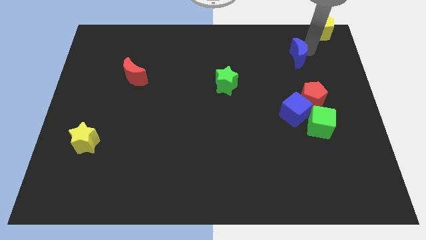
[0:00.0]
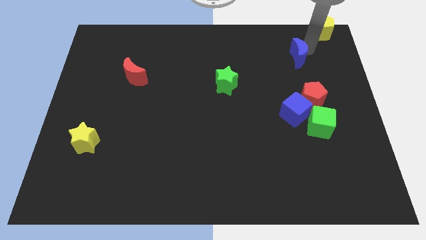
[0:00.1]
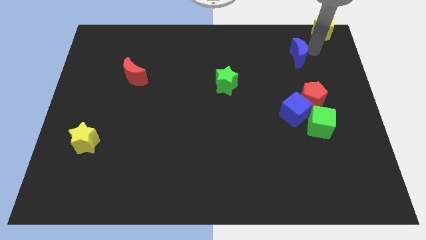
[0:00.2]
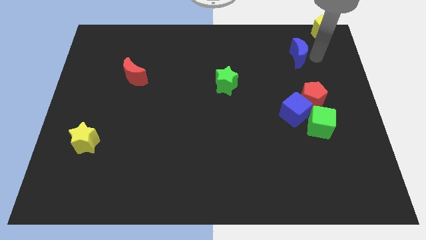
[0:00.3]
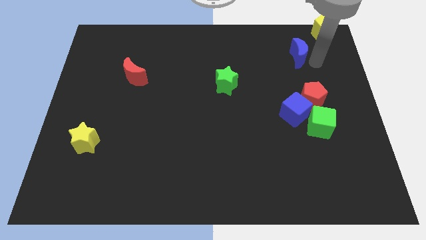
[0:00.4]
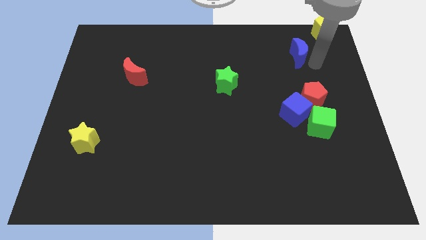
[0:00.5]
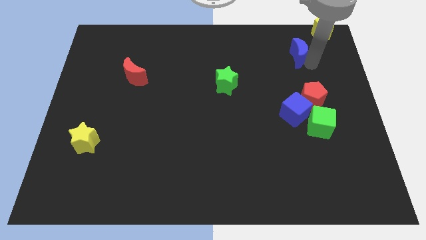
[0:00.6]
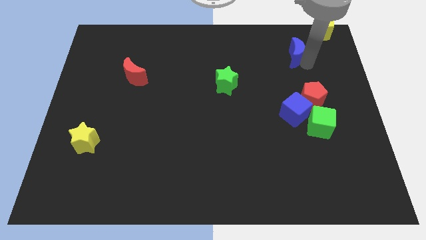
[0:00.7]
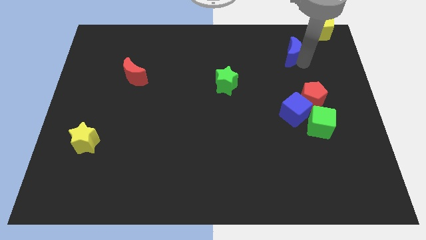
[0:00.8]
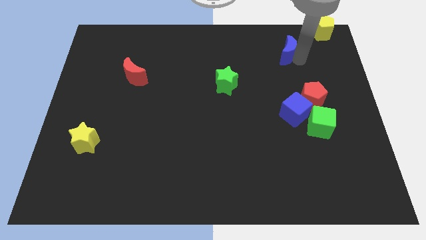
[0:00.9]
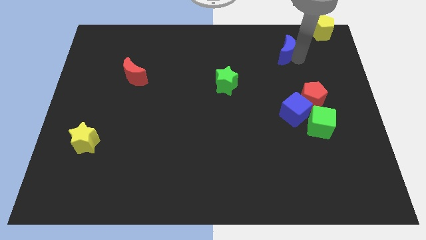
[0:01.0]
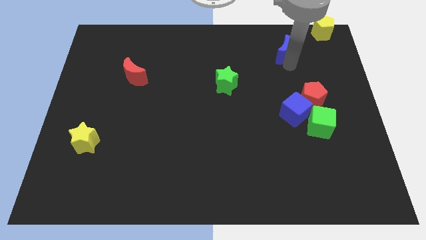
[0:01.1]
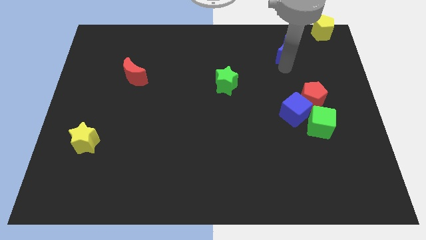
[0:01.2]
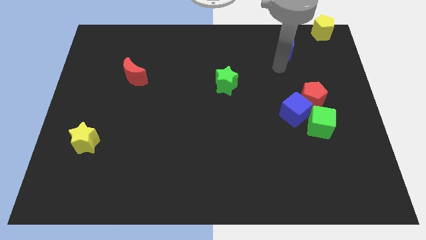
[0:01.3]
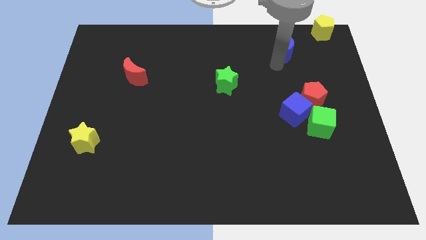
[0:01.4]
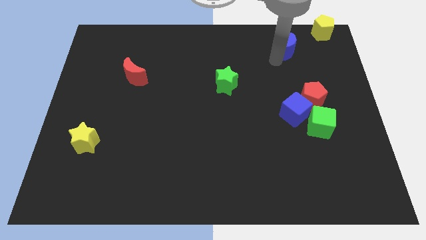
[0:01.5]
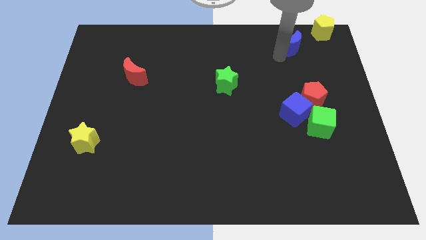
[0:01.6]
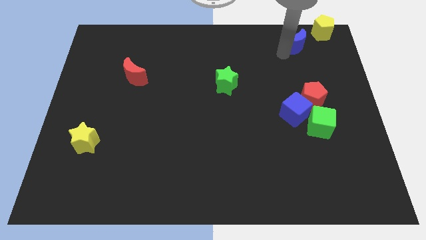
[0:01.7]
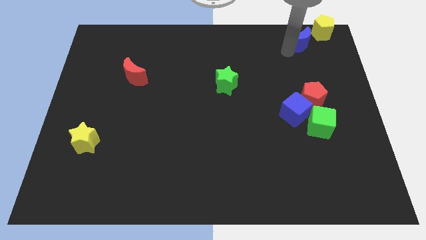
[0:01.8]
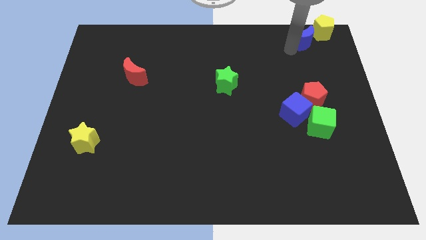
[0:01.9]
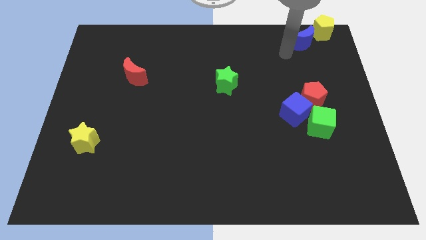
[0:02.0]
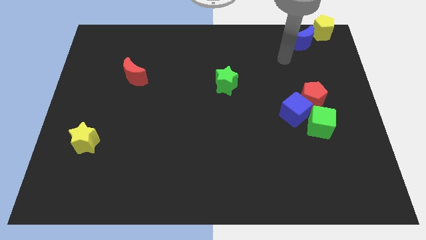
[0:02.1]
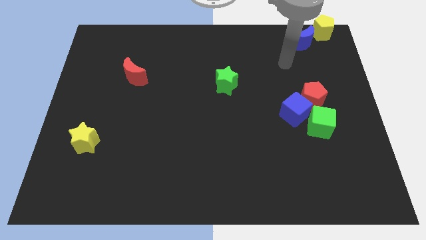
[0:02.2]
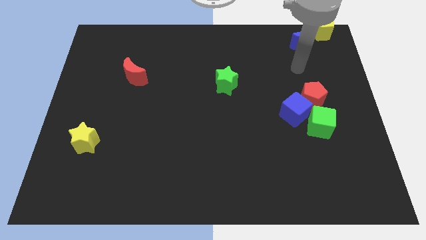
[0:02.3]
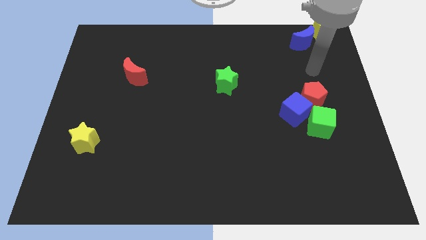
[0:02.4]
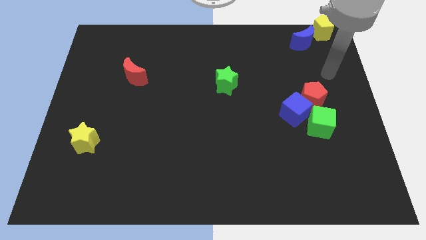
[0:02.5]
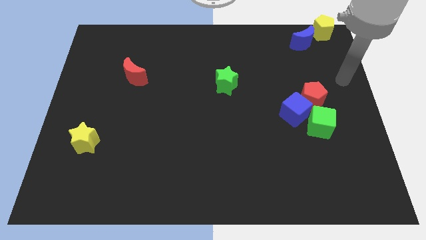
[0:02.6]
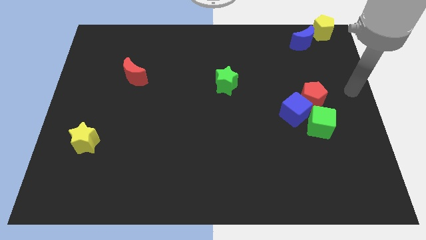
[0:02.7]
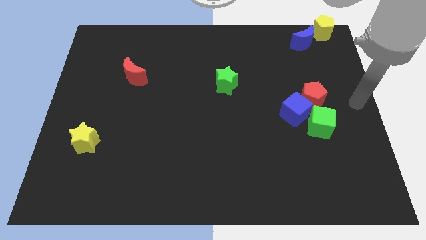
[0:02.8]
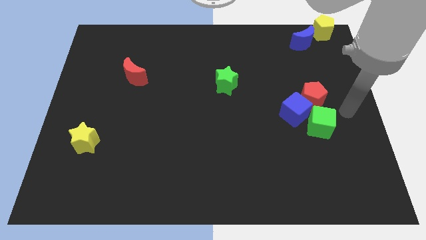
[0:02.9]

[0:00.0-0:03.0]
place the blue moon diagonally top right to green star

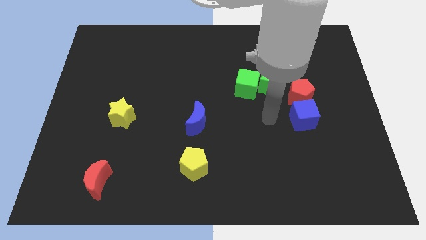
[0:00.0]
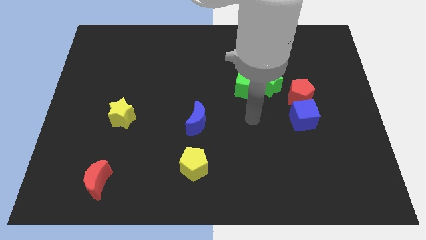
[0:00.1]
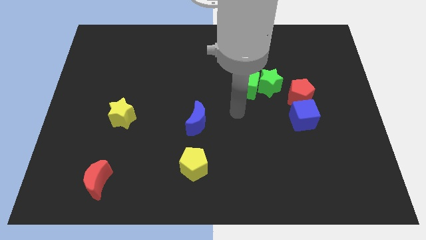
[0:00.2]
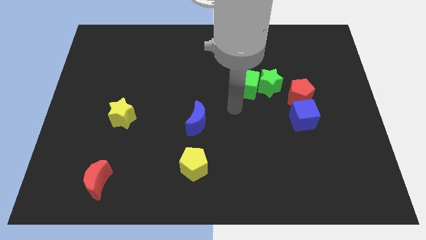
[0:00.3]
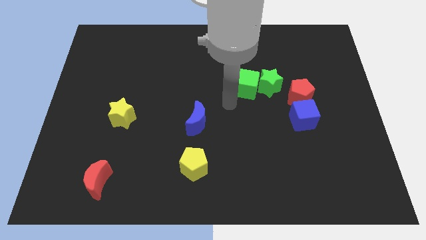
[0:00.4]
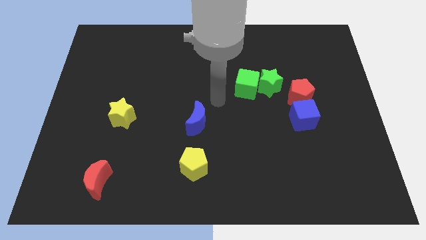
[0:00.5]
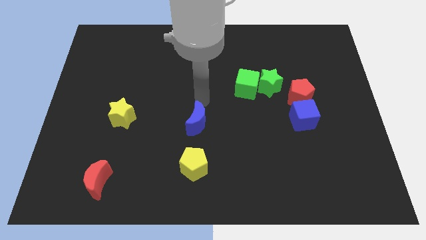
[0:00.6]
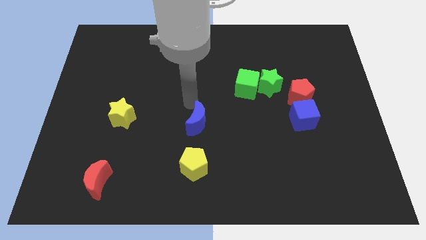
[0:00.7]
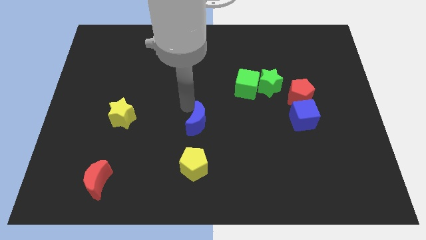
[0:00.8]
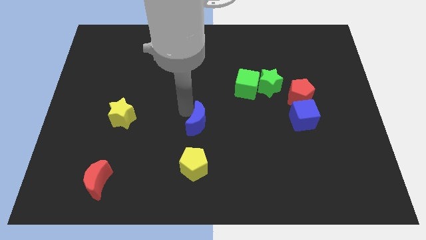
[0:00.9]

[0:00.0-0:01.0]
point your arm at the left of the blue crescent

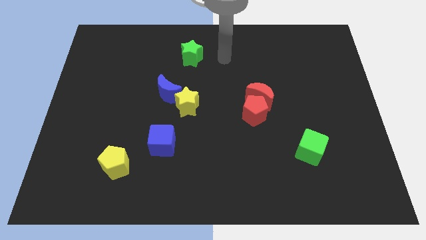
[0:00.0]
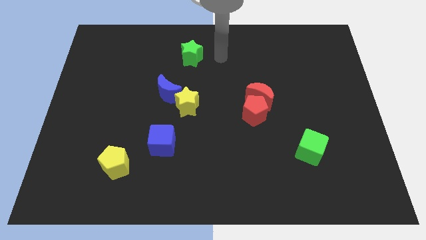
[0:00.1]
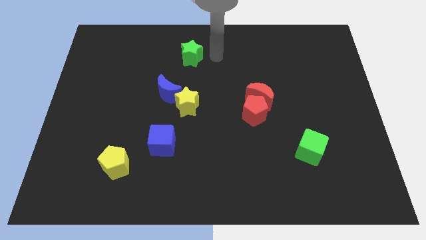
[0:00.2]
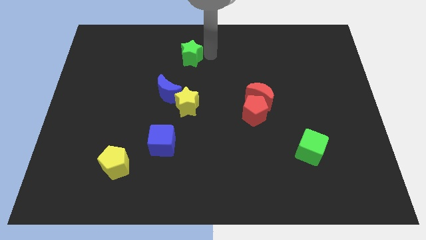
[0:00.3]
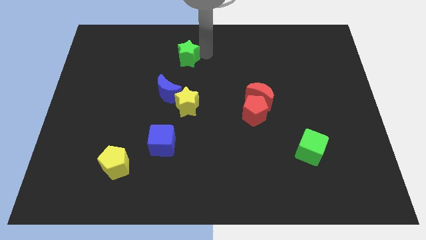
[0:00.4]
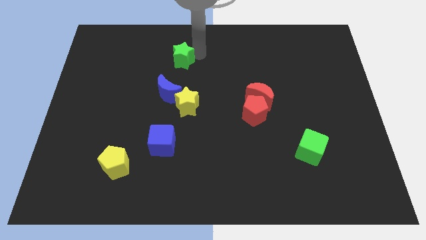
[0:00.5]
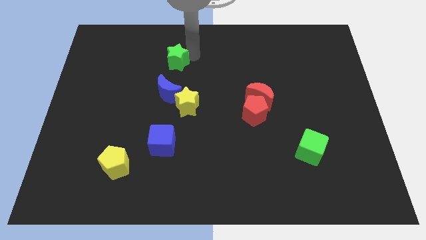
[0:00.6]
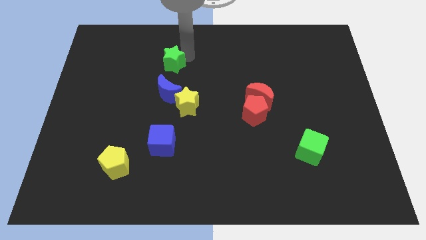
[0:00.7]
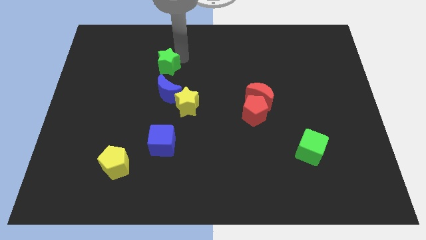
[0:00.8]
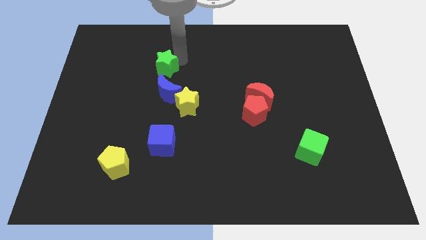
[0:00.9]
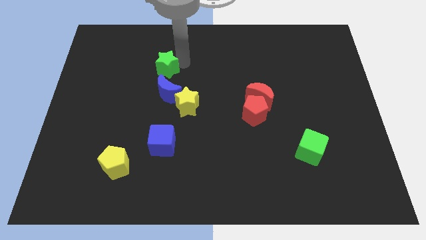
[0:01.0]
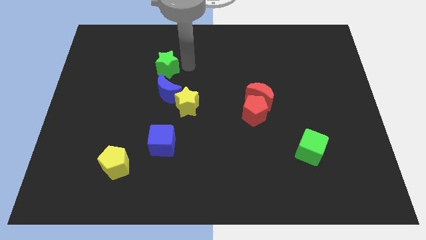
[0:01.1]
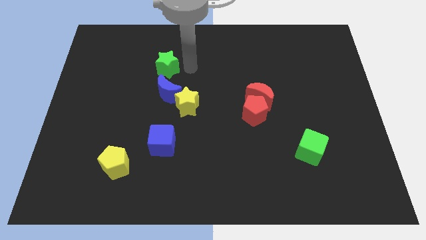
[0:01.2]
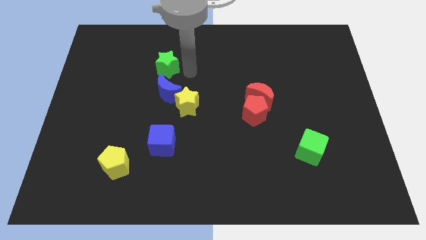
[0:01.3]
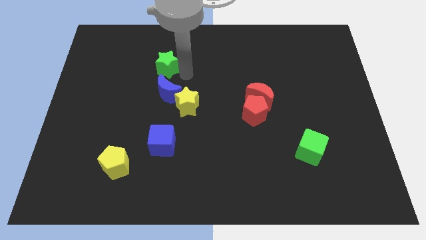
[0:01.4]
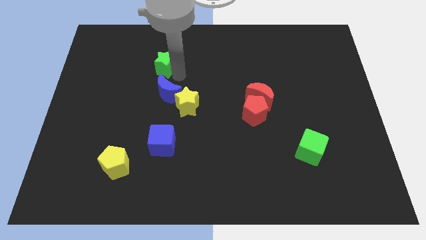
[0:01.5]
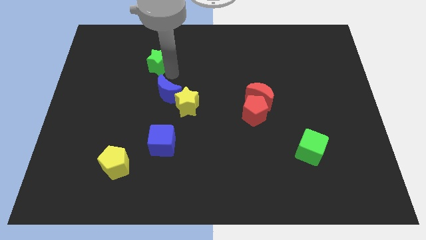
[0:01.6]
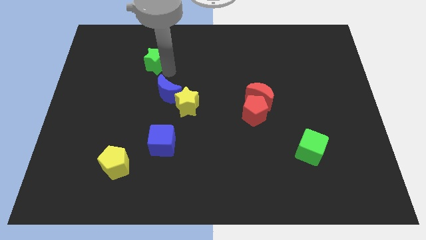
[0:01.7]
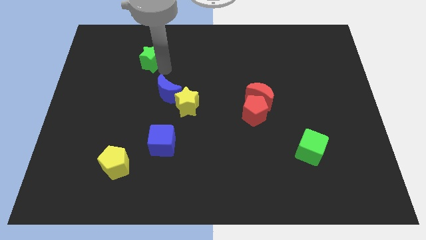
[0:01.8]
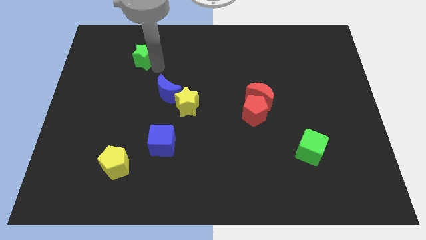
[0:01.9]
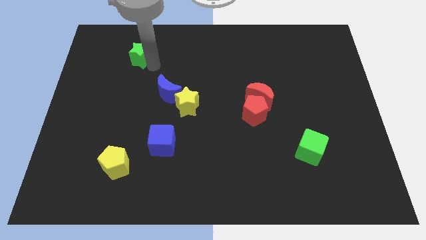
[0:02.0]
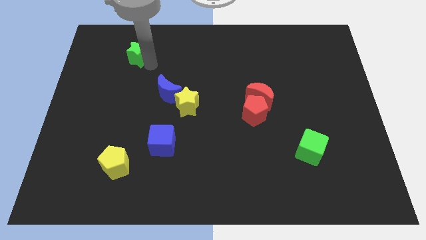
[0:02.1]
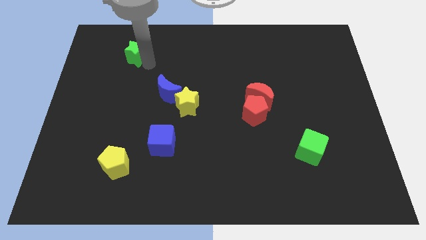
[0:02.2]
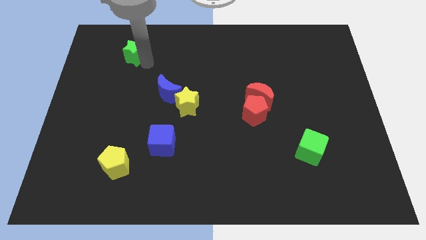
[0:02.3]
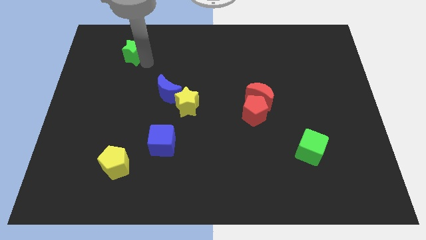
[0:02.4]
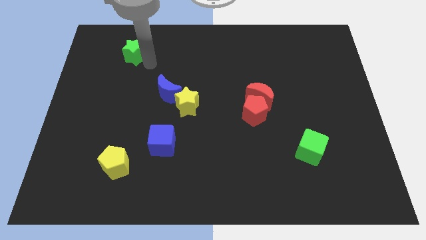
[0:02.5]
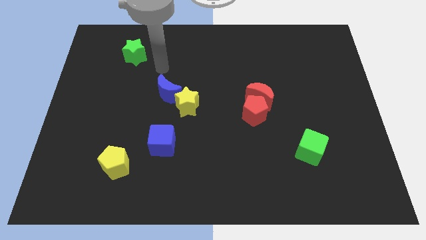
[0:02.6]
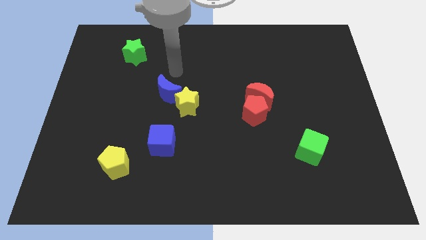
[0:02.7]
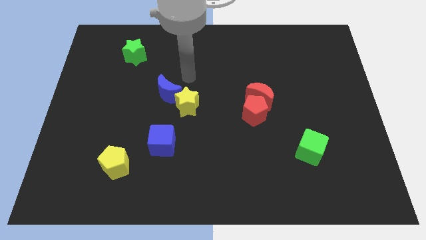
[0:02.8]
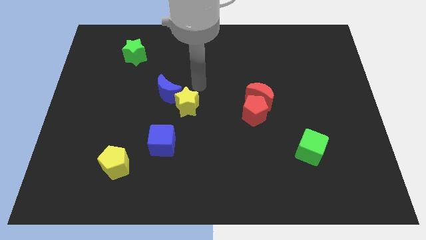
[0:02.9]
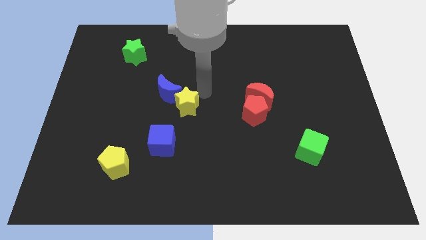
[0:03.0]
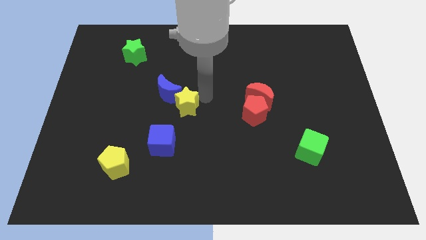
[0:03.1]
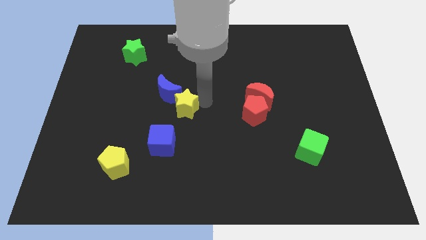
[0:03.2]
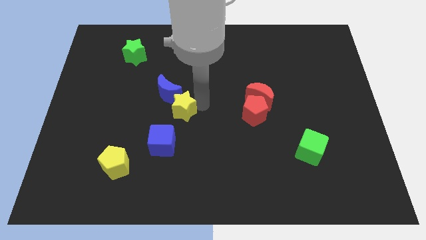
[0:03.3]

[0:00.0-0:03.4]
push the green star to the top left side of the board

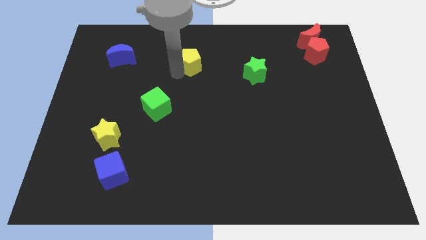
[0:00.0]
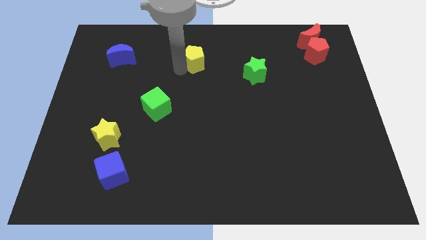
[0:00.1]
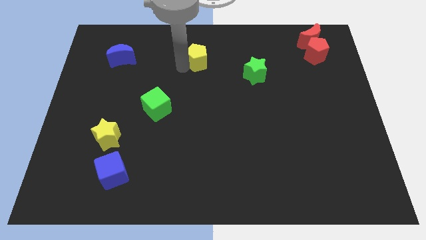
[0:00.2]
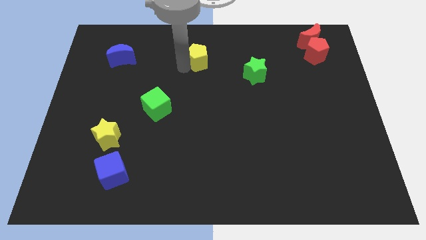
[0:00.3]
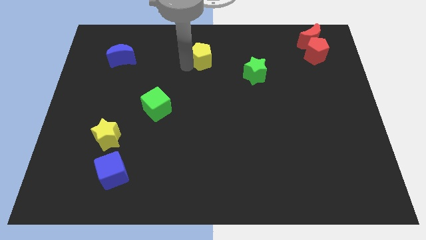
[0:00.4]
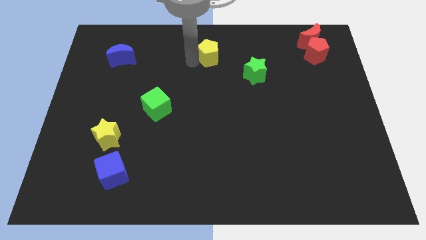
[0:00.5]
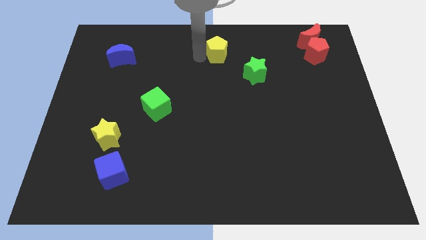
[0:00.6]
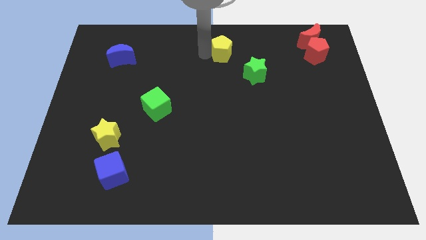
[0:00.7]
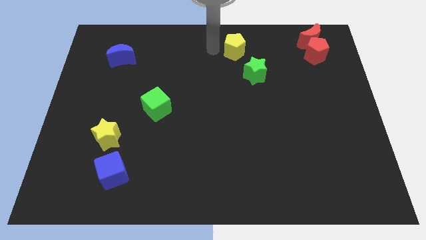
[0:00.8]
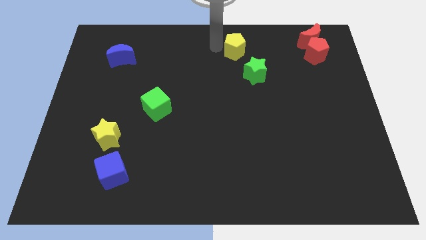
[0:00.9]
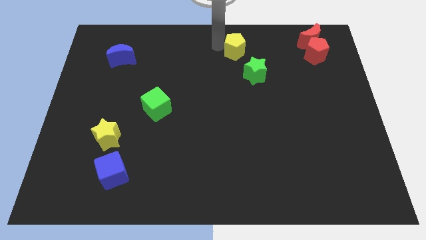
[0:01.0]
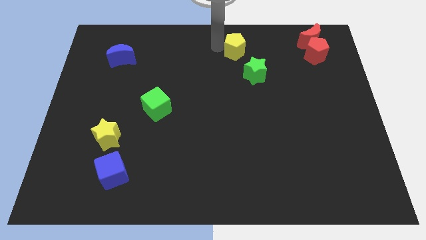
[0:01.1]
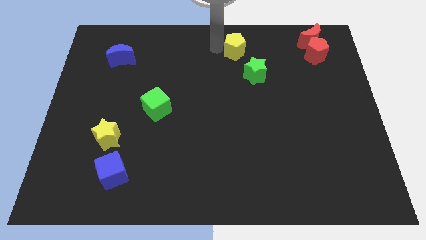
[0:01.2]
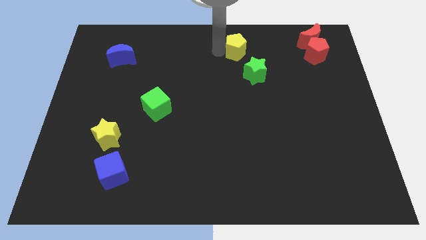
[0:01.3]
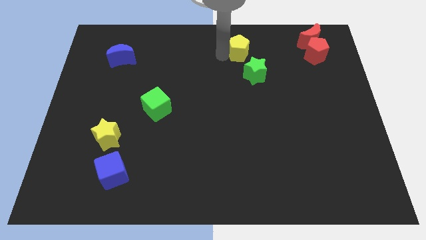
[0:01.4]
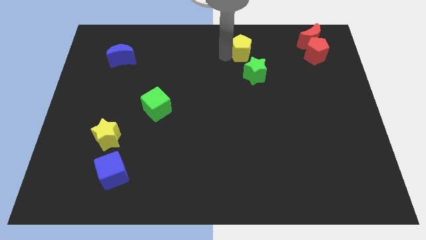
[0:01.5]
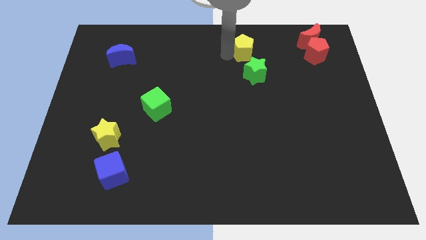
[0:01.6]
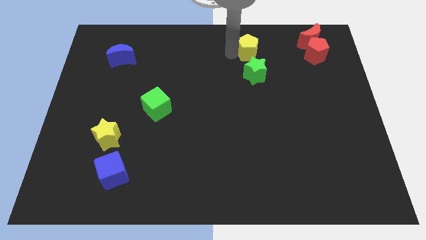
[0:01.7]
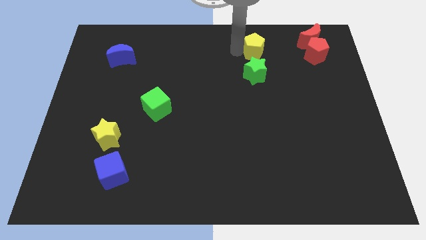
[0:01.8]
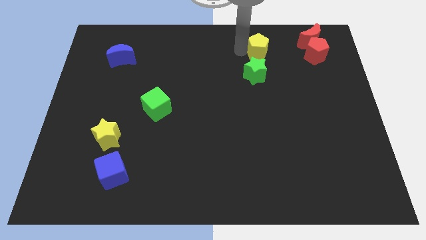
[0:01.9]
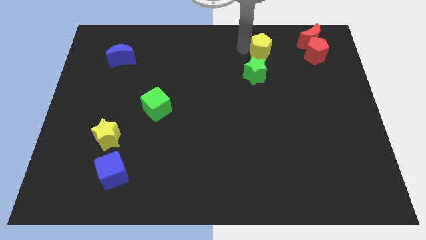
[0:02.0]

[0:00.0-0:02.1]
push yellow pentagon above green star
